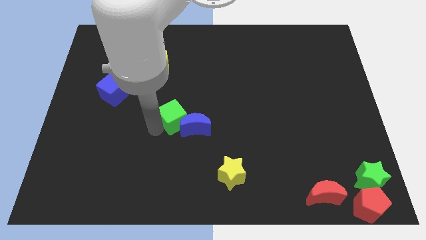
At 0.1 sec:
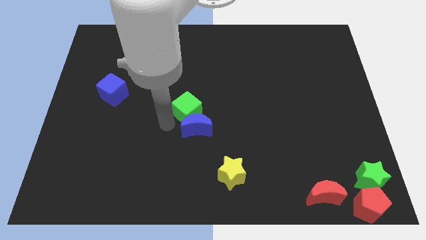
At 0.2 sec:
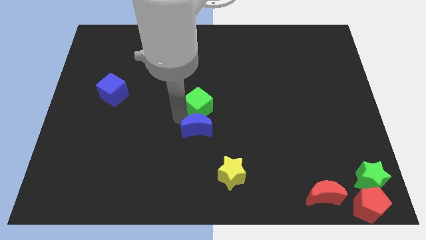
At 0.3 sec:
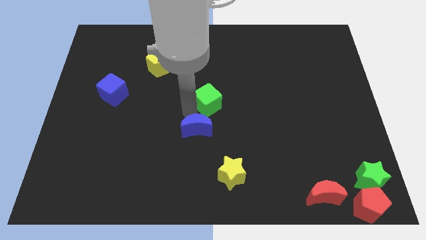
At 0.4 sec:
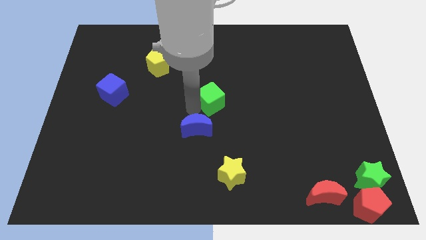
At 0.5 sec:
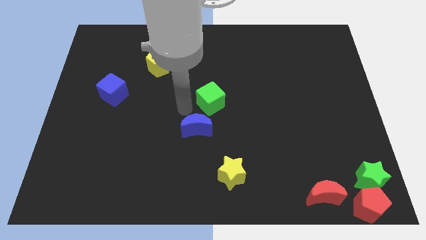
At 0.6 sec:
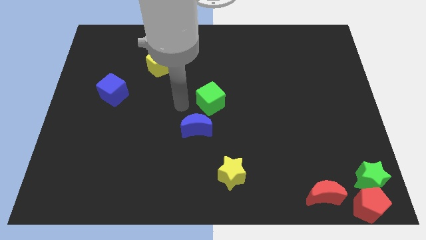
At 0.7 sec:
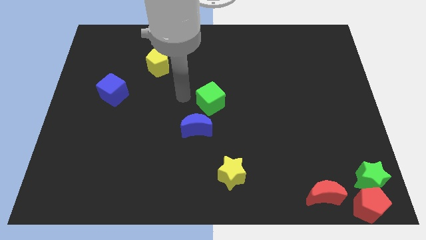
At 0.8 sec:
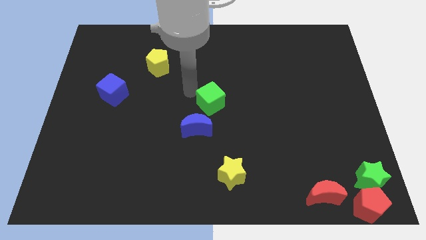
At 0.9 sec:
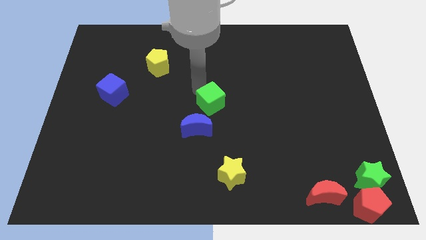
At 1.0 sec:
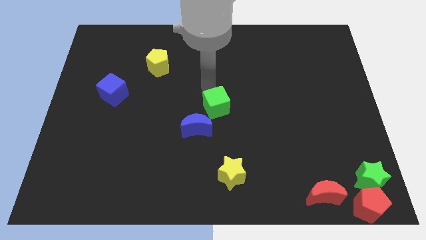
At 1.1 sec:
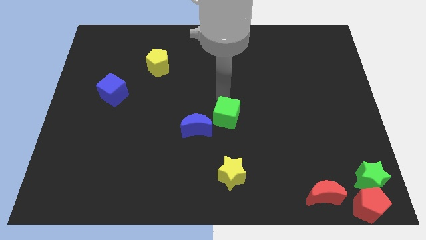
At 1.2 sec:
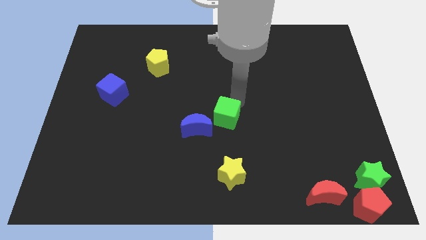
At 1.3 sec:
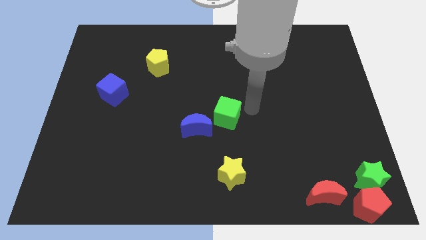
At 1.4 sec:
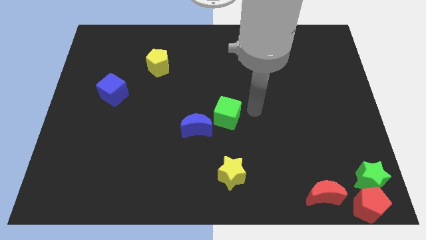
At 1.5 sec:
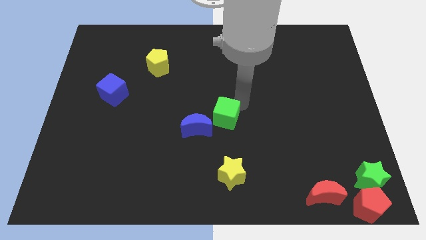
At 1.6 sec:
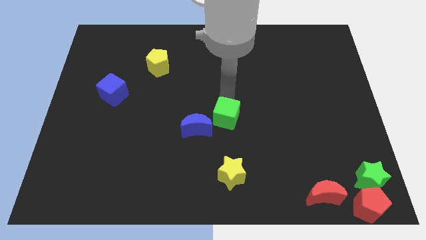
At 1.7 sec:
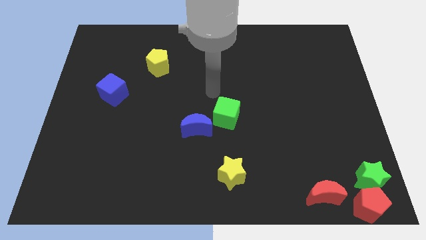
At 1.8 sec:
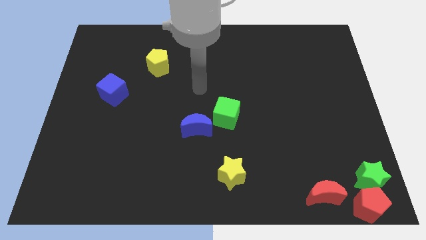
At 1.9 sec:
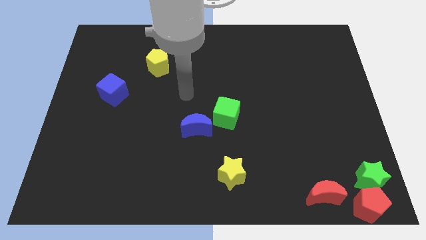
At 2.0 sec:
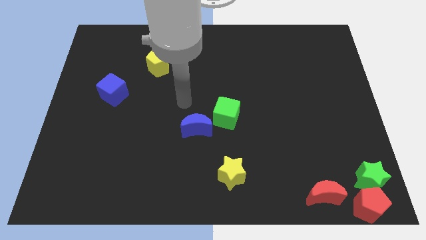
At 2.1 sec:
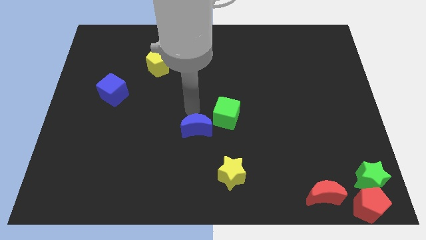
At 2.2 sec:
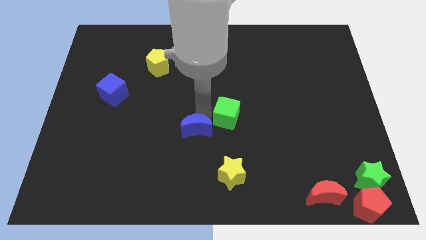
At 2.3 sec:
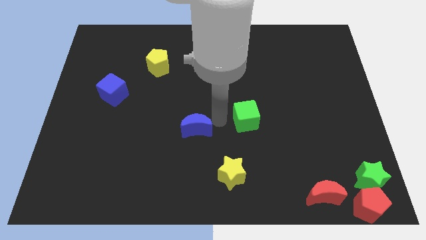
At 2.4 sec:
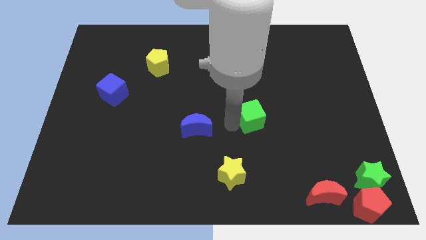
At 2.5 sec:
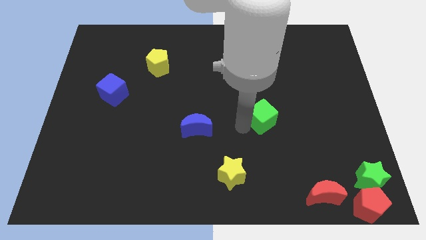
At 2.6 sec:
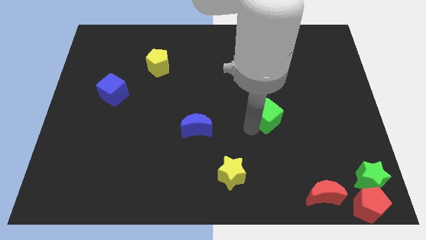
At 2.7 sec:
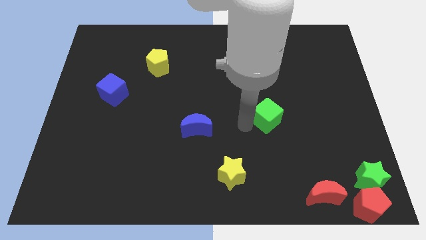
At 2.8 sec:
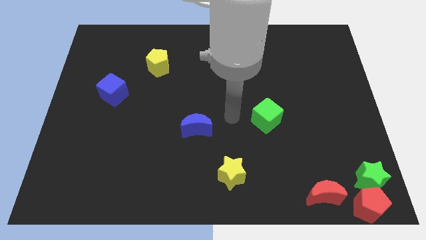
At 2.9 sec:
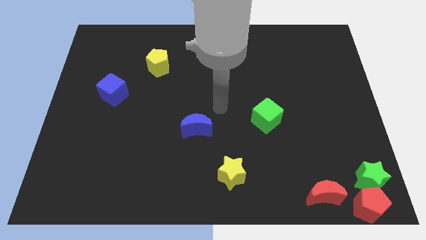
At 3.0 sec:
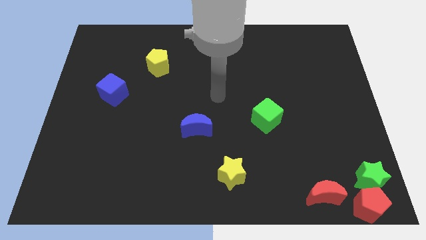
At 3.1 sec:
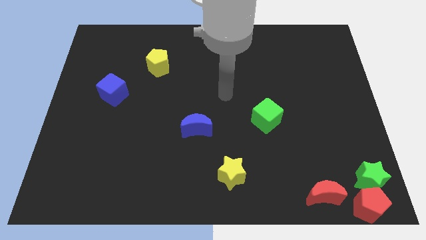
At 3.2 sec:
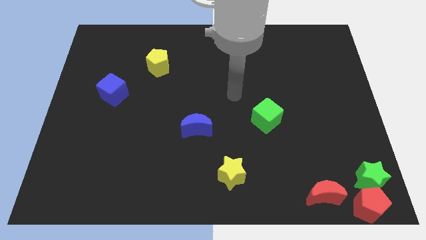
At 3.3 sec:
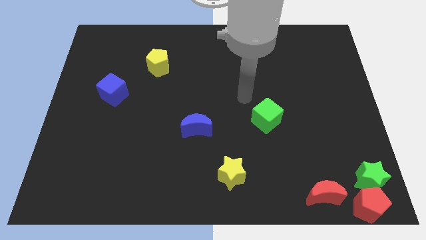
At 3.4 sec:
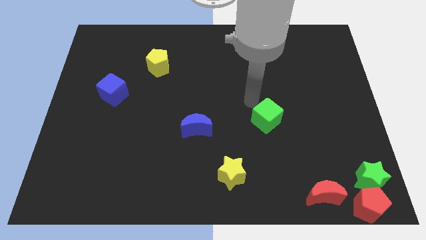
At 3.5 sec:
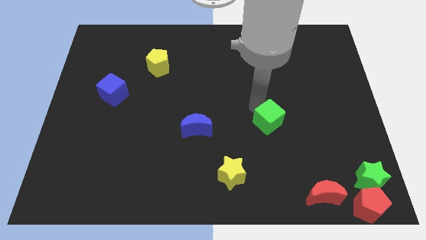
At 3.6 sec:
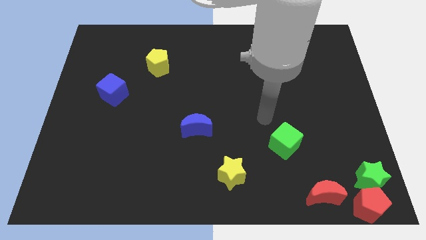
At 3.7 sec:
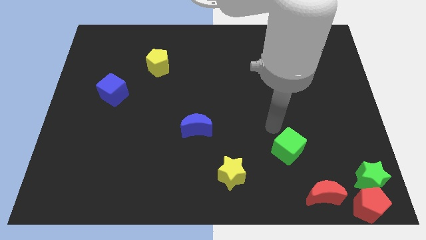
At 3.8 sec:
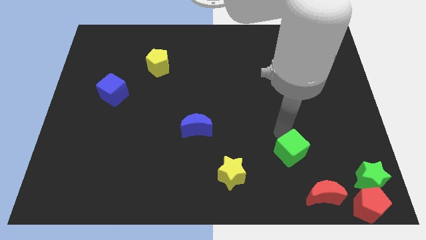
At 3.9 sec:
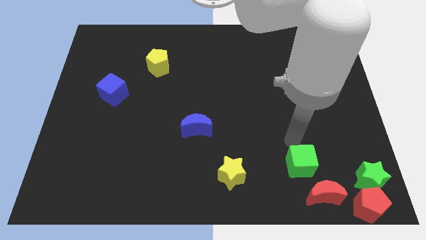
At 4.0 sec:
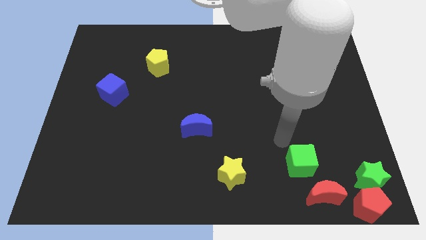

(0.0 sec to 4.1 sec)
separate green cube from blue moon

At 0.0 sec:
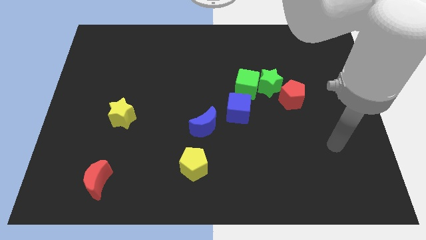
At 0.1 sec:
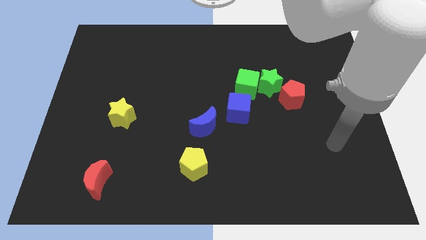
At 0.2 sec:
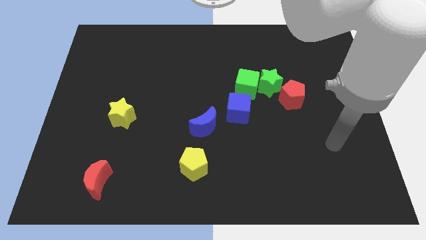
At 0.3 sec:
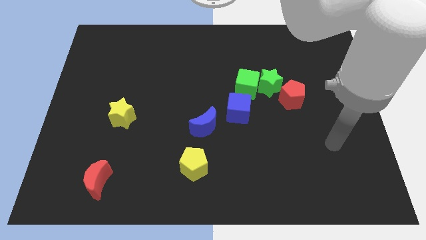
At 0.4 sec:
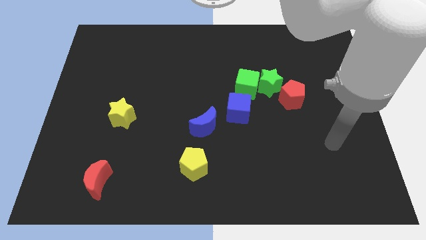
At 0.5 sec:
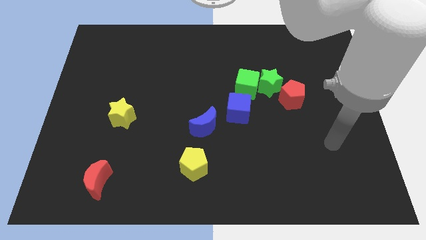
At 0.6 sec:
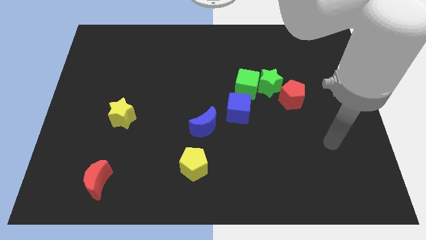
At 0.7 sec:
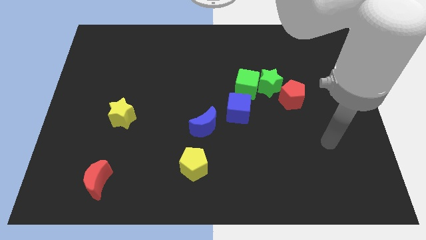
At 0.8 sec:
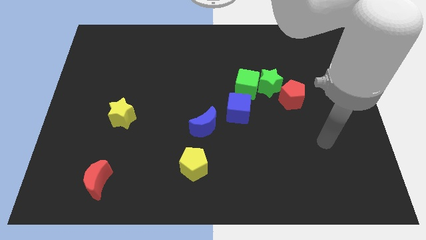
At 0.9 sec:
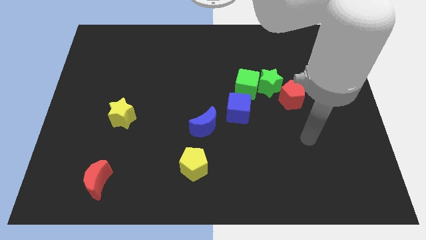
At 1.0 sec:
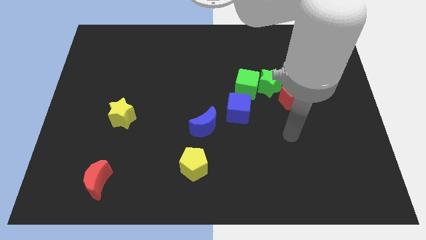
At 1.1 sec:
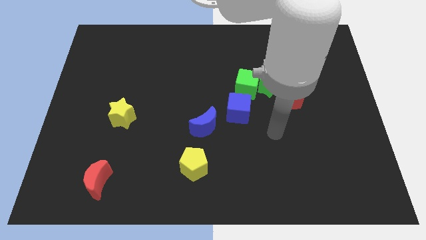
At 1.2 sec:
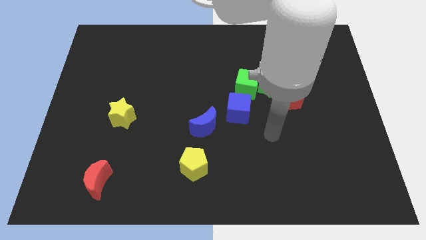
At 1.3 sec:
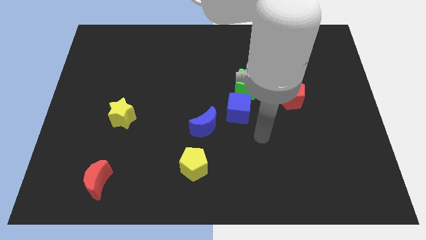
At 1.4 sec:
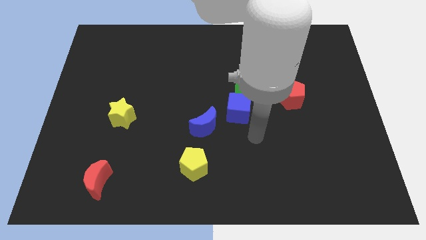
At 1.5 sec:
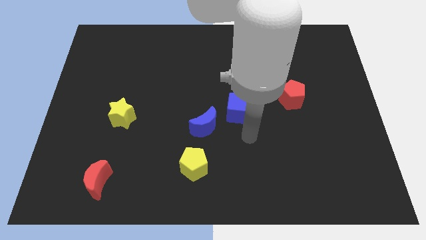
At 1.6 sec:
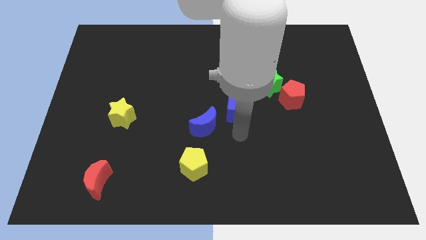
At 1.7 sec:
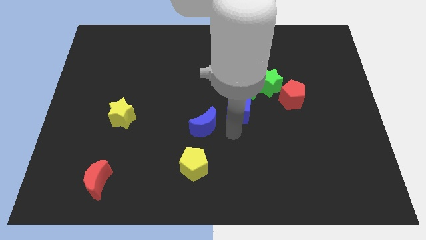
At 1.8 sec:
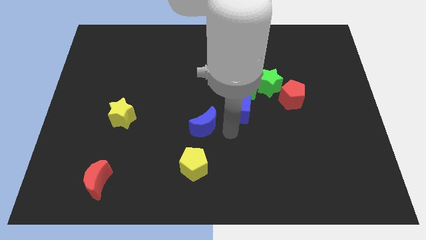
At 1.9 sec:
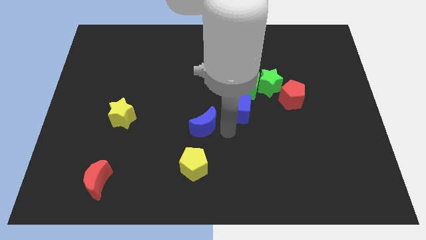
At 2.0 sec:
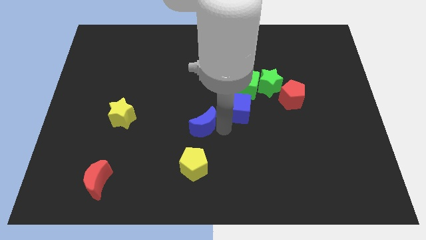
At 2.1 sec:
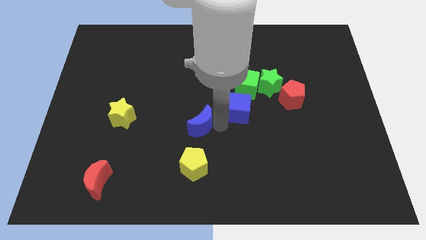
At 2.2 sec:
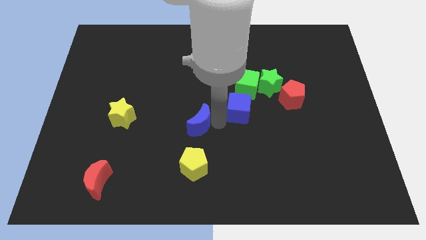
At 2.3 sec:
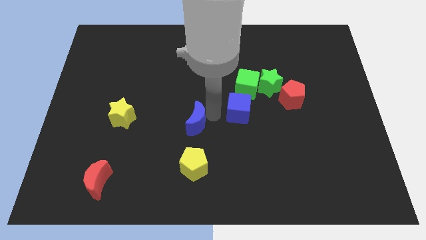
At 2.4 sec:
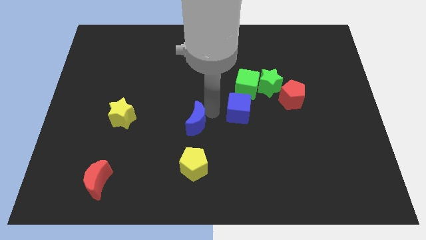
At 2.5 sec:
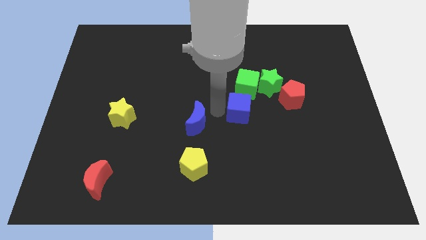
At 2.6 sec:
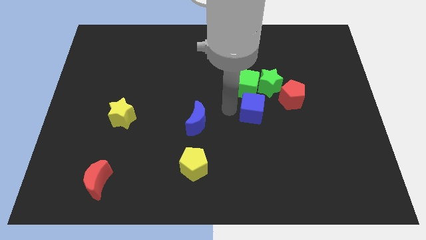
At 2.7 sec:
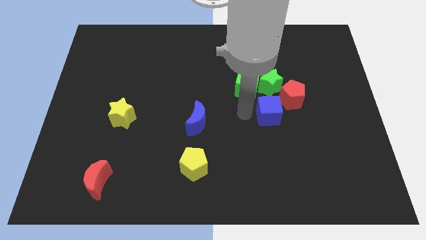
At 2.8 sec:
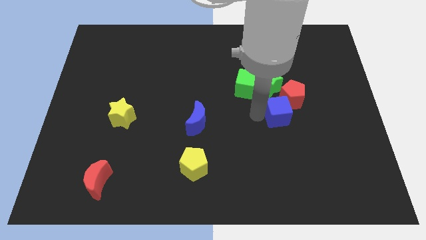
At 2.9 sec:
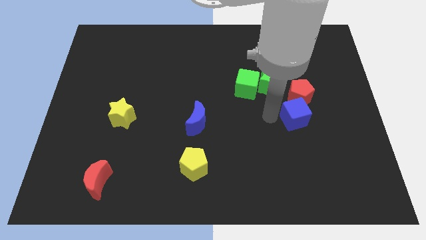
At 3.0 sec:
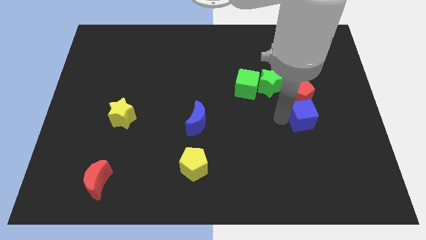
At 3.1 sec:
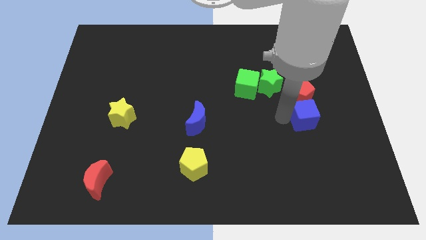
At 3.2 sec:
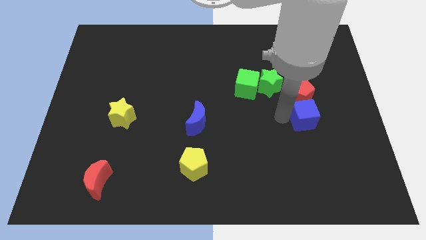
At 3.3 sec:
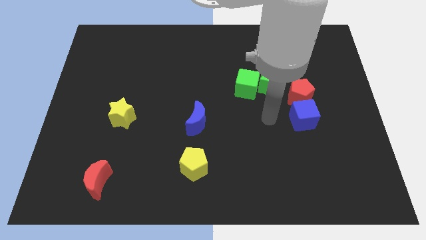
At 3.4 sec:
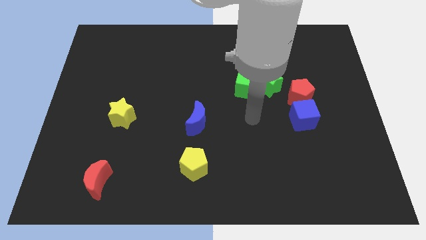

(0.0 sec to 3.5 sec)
separate blue moon and blue cube

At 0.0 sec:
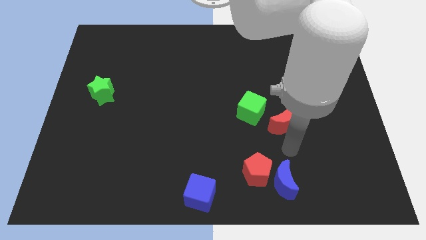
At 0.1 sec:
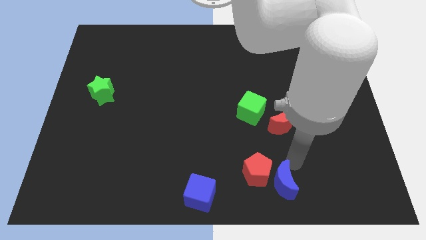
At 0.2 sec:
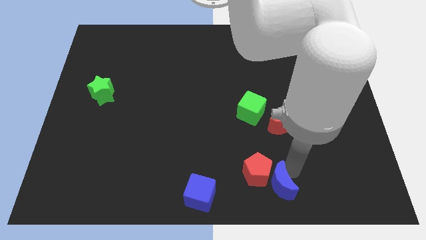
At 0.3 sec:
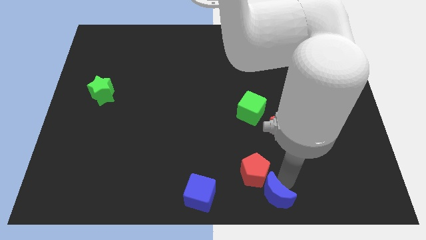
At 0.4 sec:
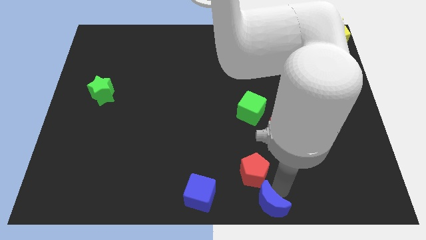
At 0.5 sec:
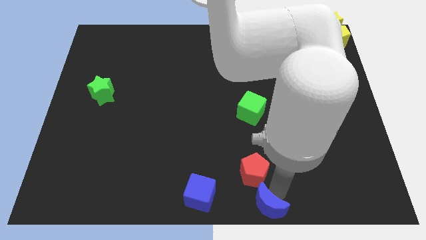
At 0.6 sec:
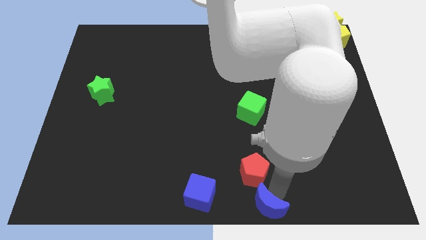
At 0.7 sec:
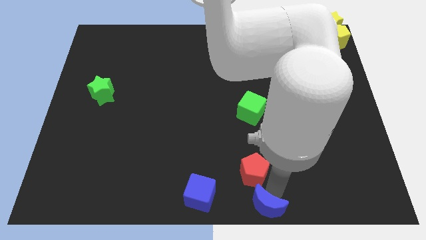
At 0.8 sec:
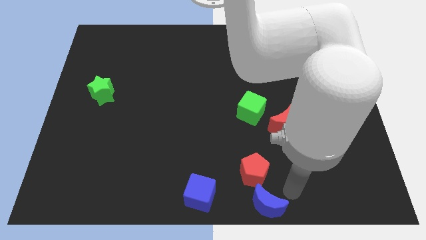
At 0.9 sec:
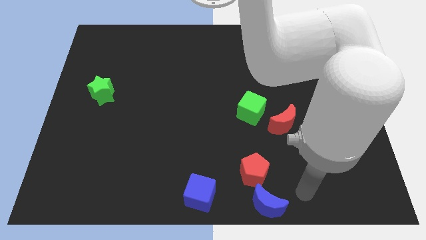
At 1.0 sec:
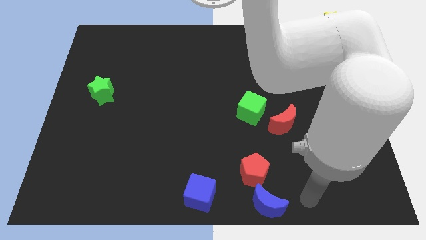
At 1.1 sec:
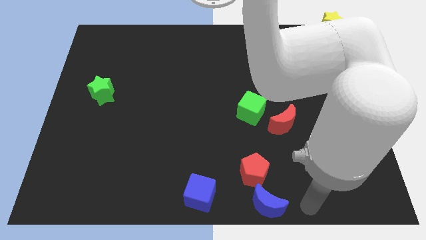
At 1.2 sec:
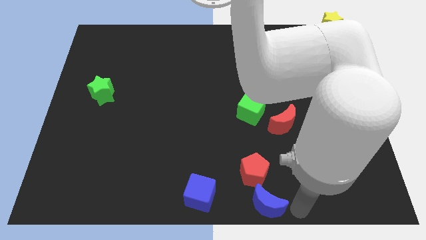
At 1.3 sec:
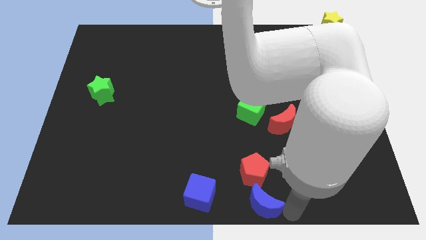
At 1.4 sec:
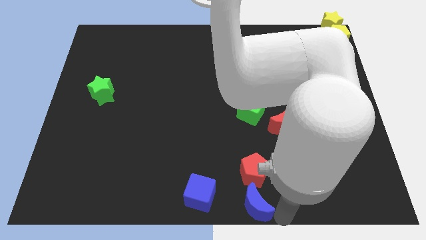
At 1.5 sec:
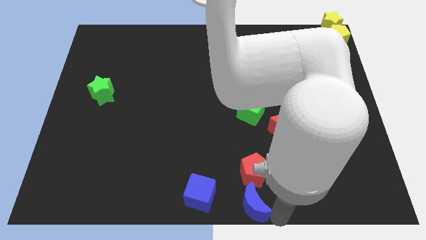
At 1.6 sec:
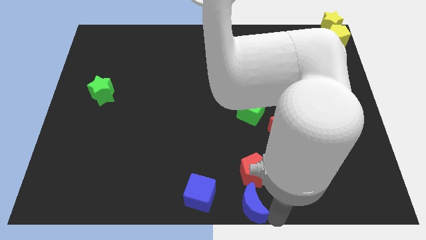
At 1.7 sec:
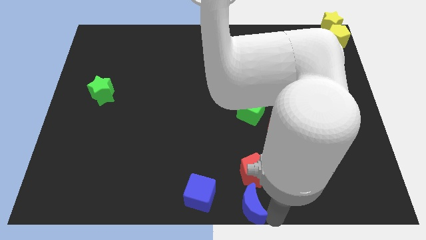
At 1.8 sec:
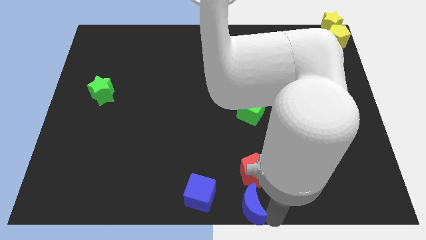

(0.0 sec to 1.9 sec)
push the blue crescent to the bottom of red crescent
